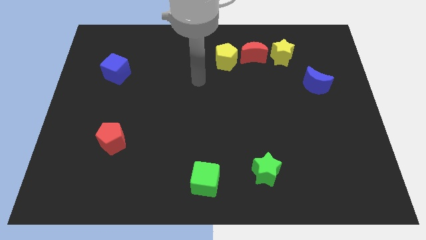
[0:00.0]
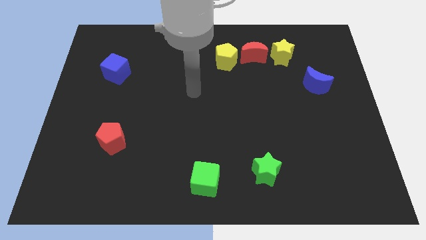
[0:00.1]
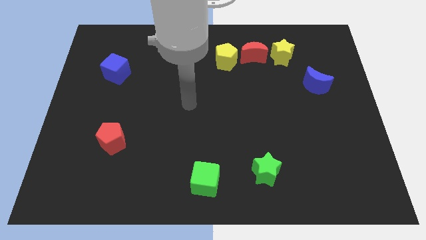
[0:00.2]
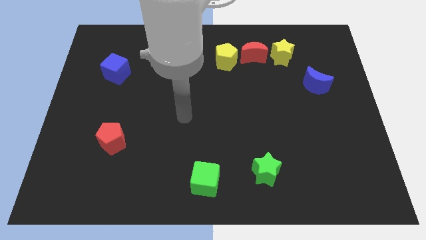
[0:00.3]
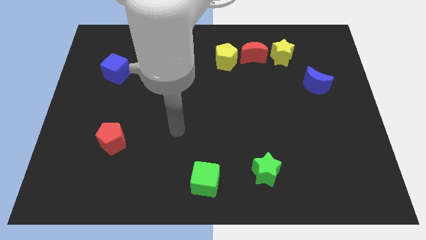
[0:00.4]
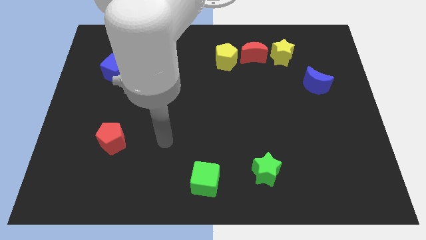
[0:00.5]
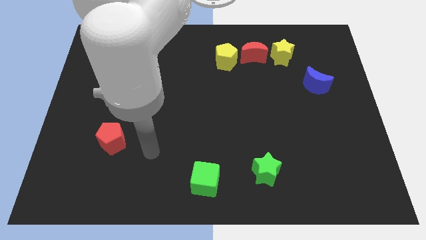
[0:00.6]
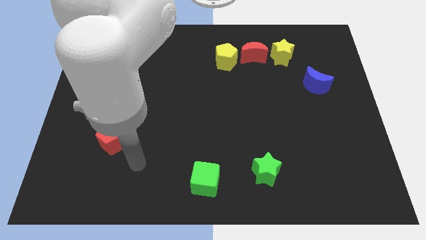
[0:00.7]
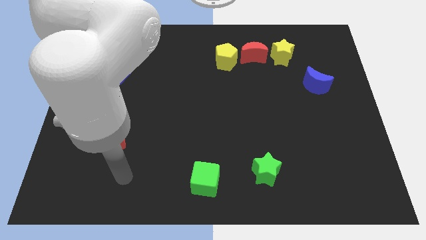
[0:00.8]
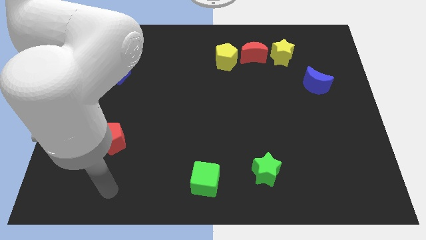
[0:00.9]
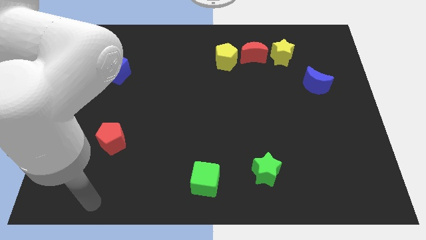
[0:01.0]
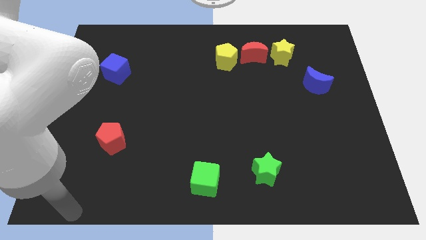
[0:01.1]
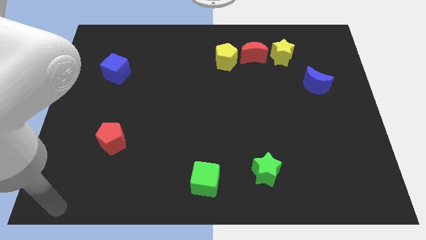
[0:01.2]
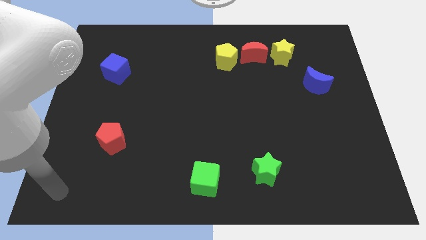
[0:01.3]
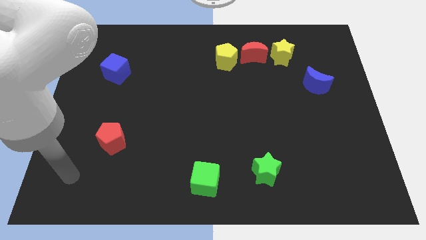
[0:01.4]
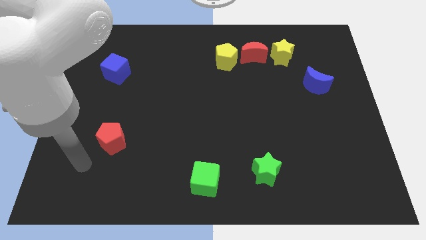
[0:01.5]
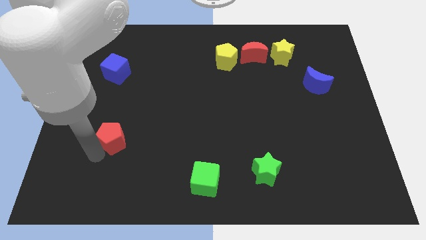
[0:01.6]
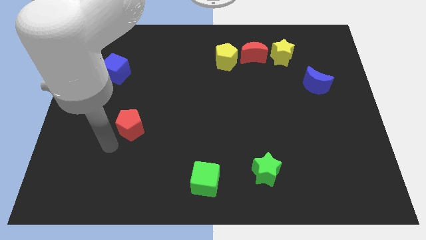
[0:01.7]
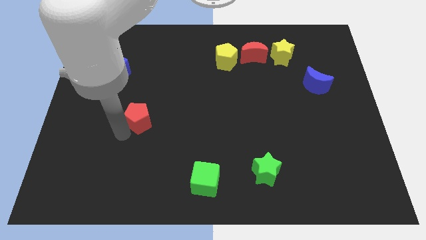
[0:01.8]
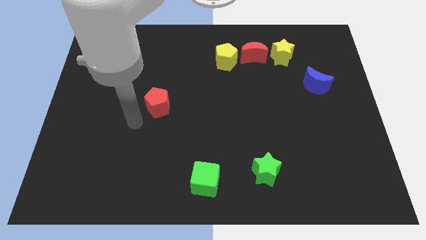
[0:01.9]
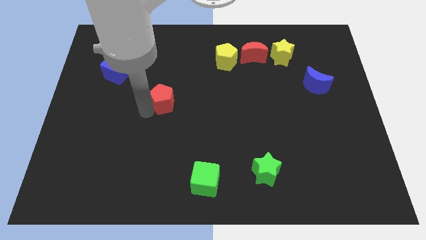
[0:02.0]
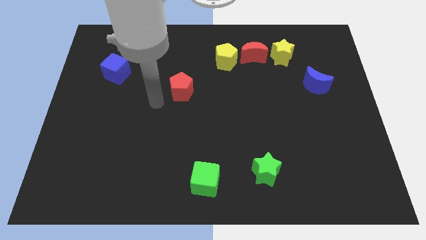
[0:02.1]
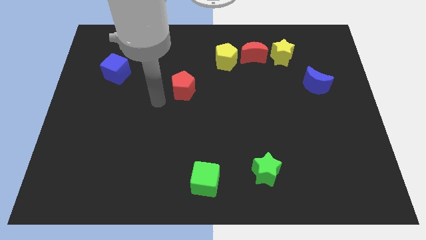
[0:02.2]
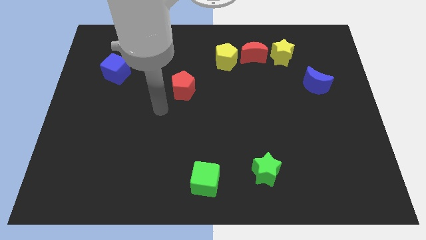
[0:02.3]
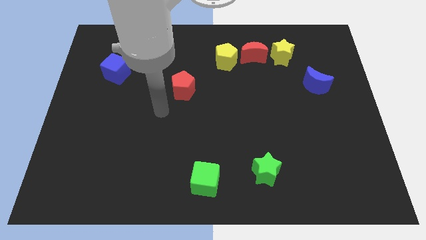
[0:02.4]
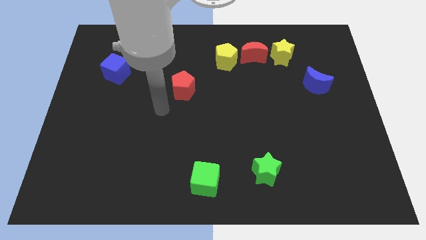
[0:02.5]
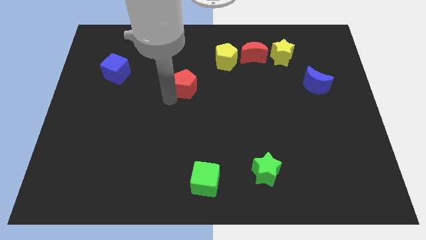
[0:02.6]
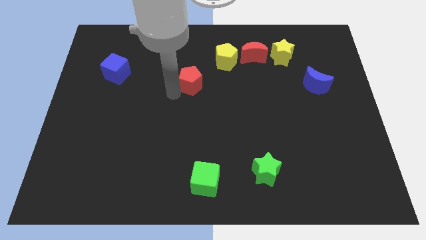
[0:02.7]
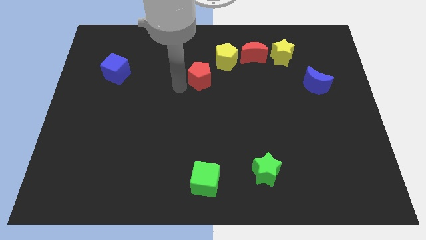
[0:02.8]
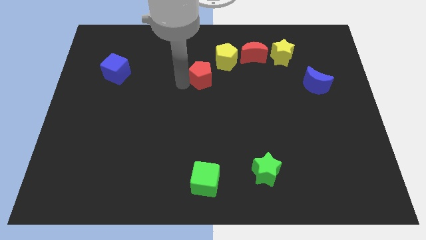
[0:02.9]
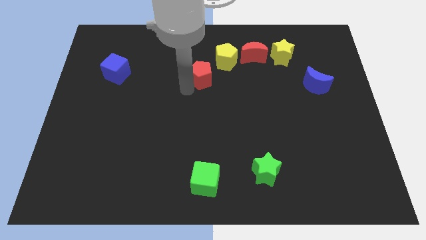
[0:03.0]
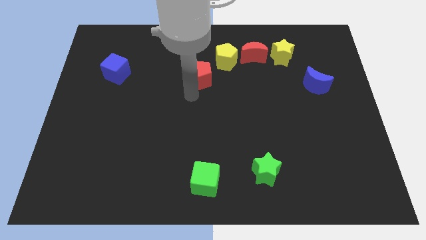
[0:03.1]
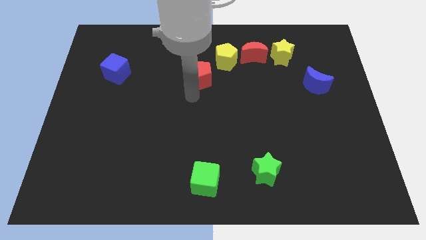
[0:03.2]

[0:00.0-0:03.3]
put the red pentagon above the green cube

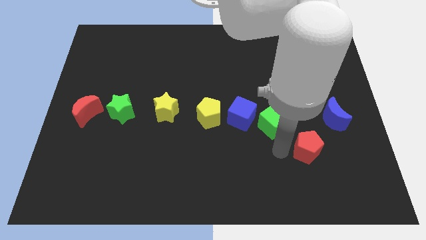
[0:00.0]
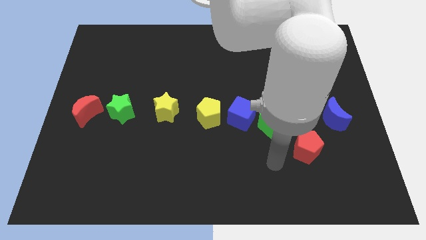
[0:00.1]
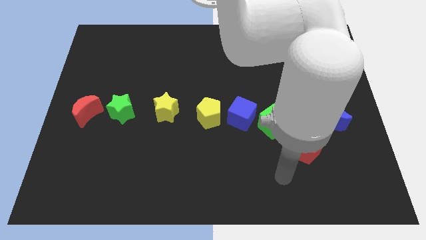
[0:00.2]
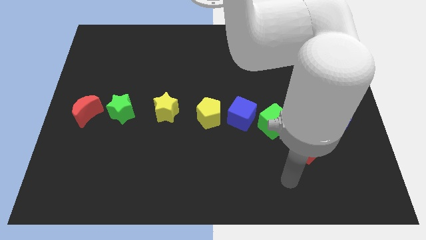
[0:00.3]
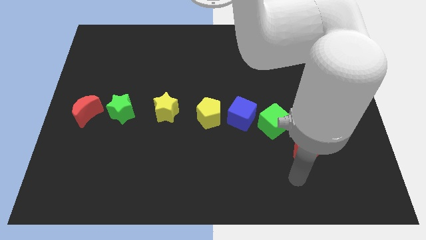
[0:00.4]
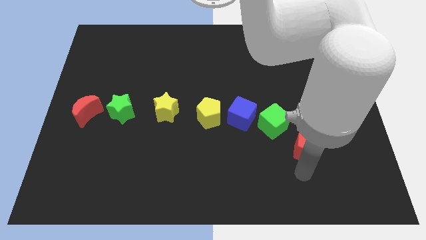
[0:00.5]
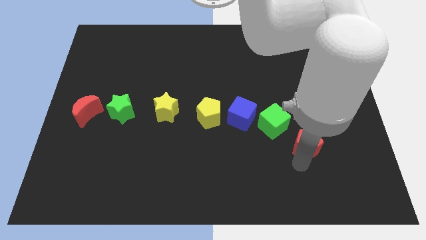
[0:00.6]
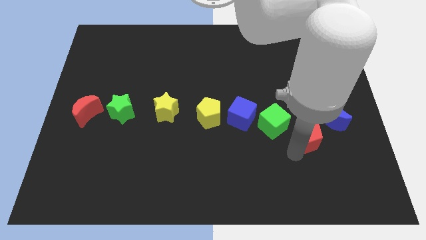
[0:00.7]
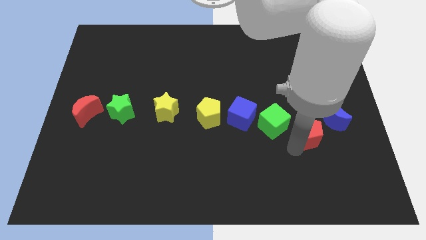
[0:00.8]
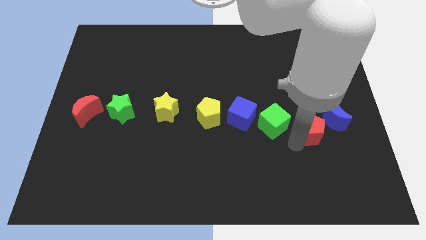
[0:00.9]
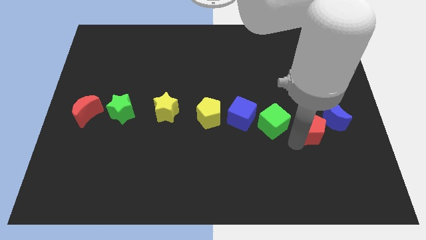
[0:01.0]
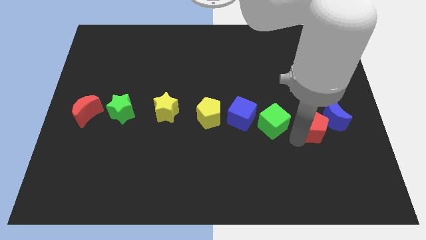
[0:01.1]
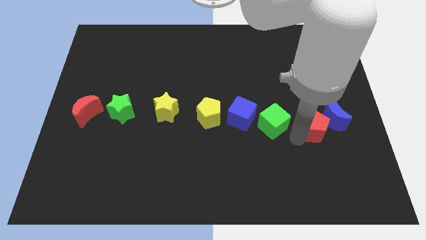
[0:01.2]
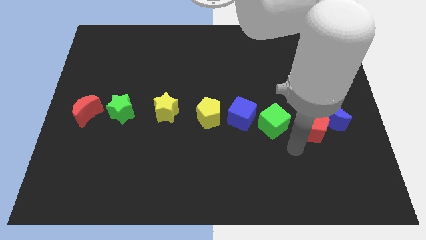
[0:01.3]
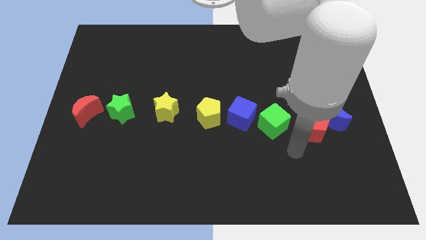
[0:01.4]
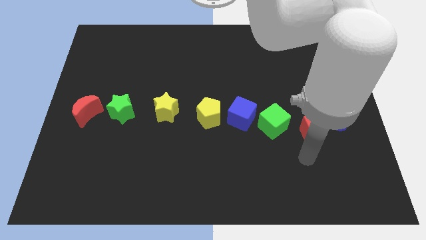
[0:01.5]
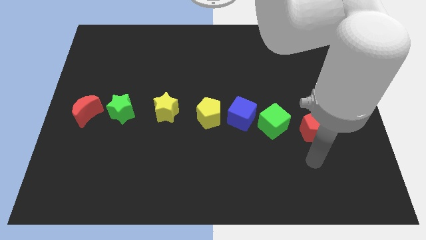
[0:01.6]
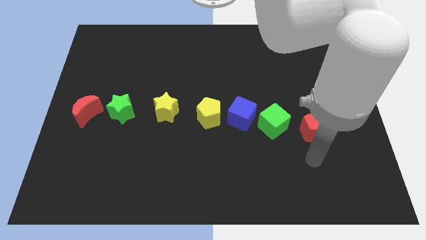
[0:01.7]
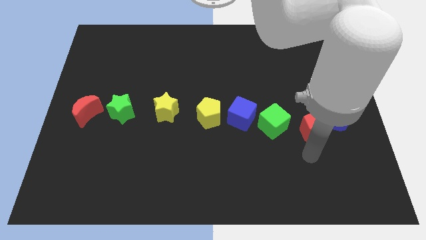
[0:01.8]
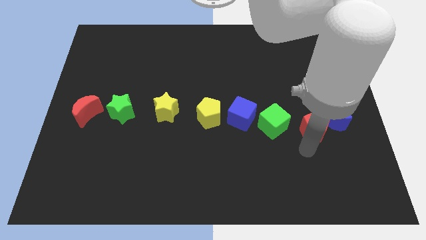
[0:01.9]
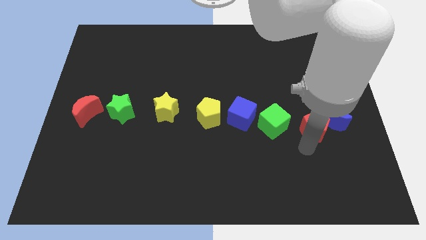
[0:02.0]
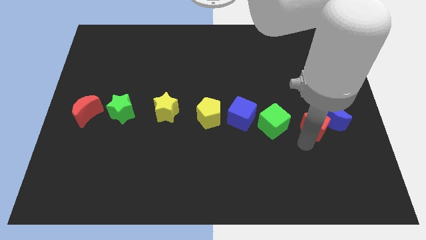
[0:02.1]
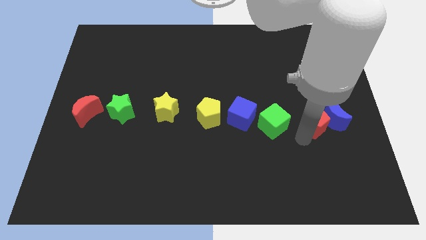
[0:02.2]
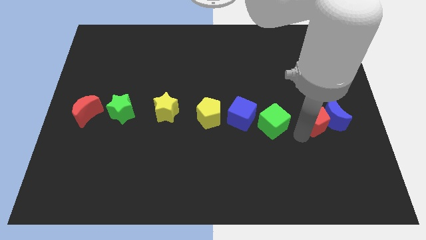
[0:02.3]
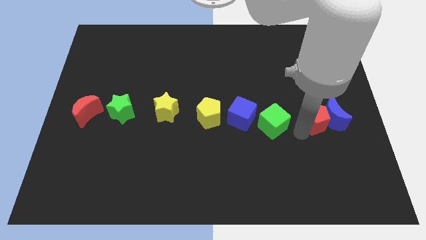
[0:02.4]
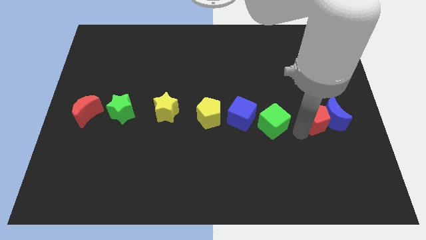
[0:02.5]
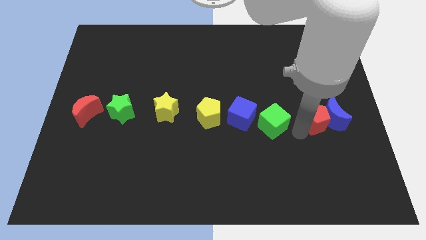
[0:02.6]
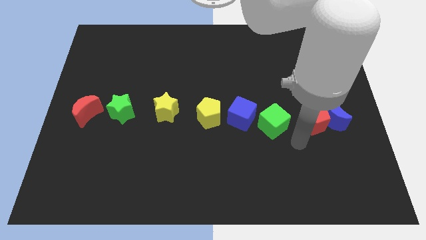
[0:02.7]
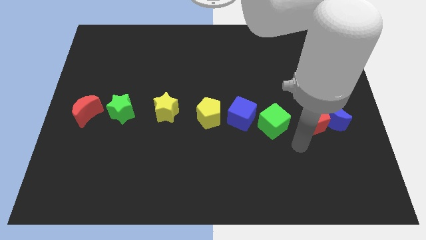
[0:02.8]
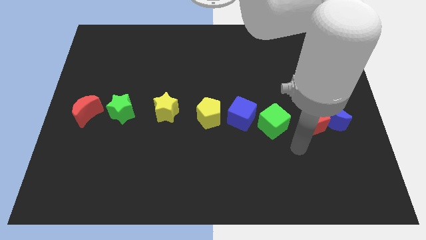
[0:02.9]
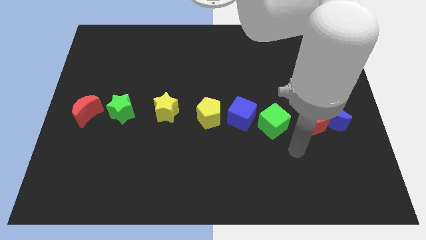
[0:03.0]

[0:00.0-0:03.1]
place the red penatgon in between the green cube and blue crescent

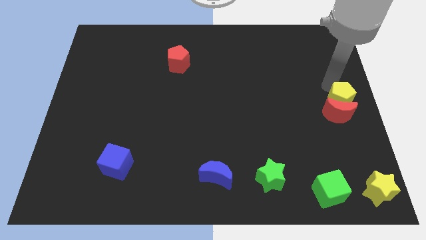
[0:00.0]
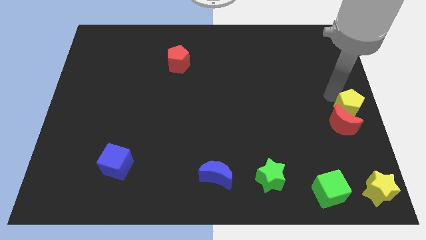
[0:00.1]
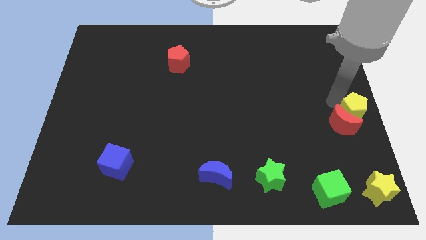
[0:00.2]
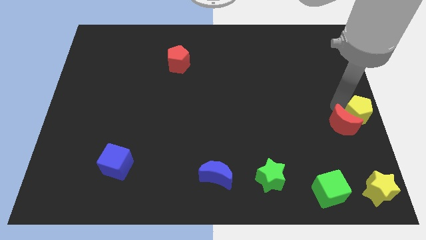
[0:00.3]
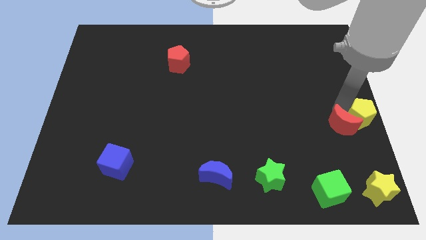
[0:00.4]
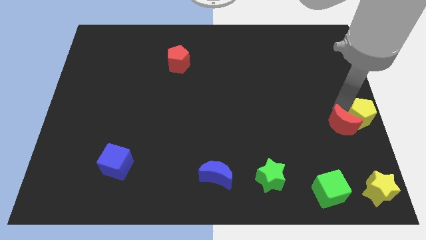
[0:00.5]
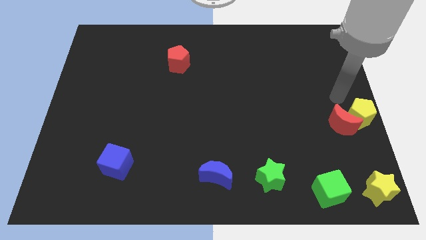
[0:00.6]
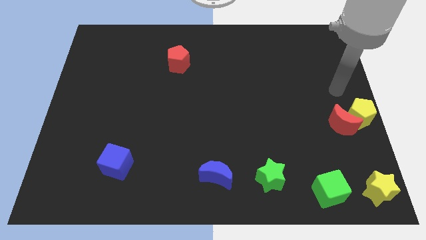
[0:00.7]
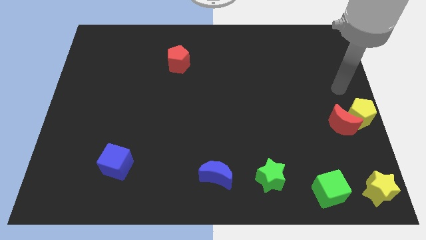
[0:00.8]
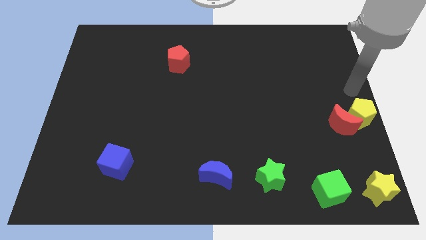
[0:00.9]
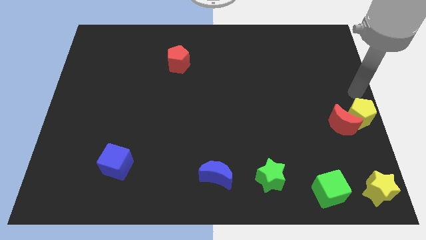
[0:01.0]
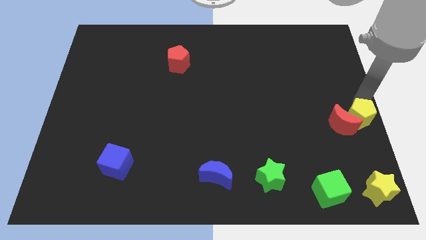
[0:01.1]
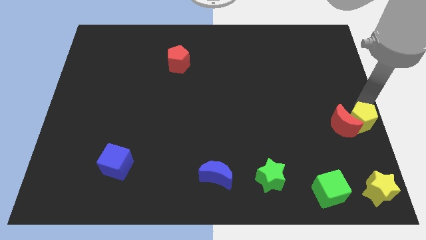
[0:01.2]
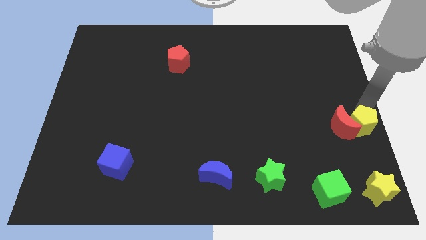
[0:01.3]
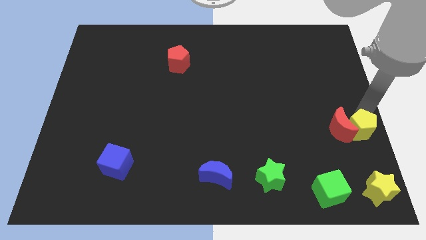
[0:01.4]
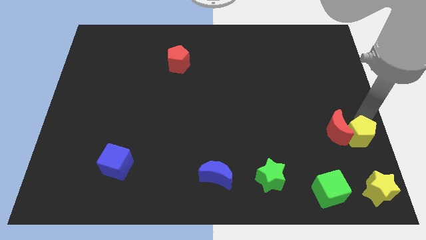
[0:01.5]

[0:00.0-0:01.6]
push the yellow pentagon to the right of the red crescent

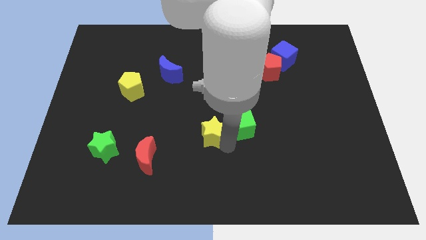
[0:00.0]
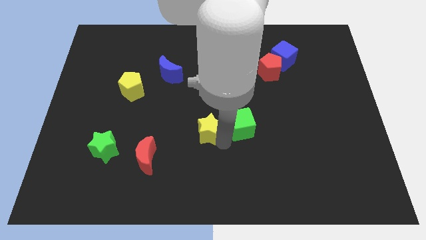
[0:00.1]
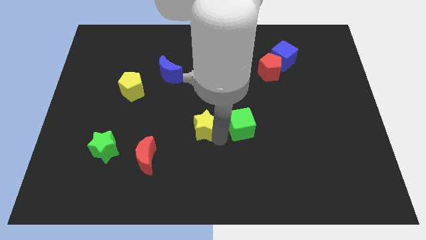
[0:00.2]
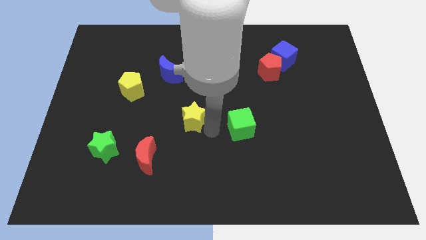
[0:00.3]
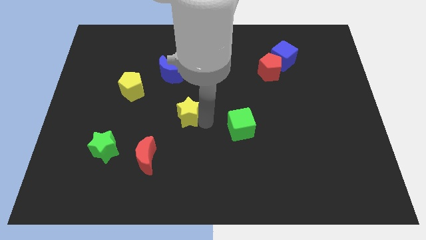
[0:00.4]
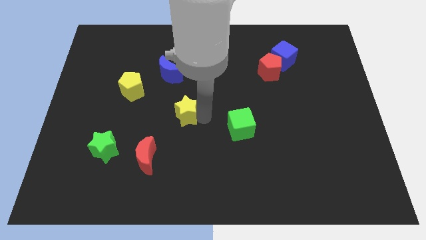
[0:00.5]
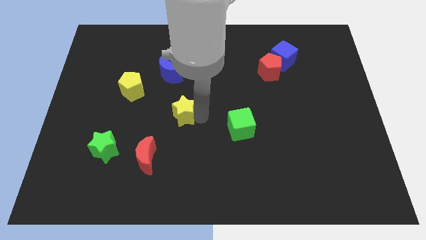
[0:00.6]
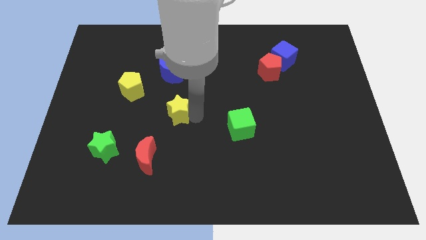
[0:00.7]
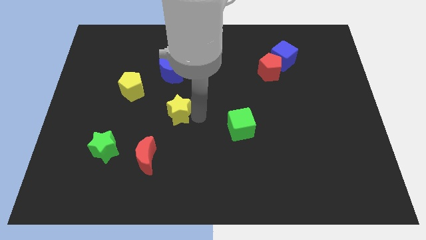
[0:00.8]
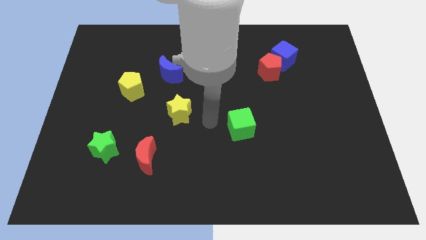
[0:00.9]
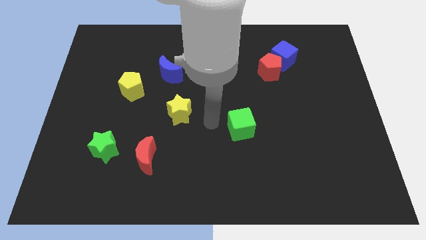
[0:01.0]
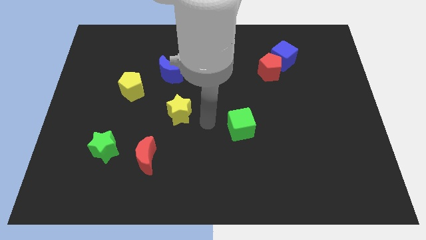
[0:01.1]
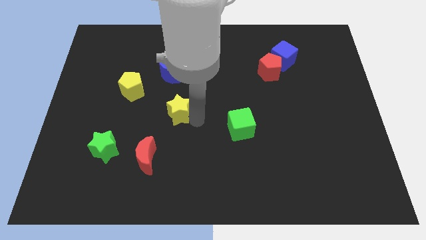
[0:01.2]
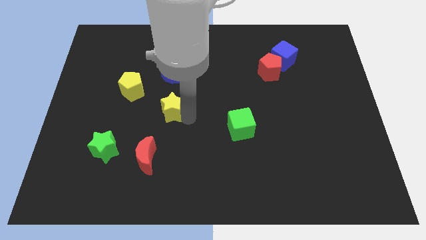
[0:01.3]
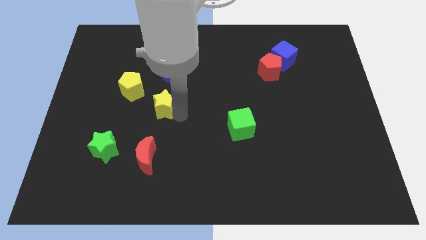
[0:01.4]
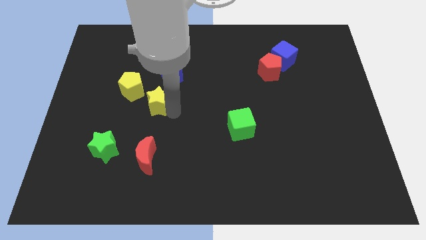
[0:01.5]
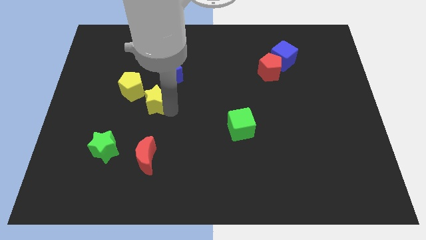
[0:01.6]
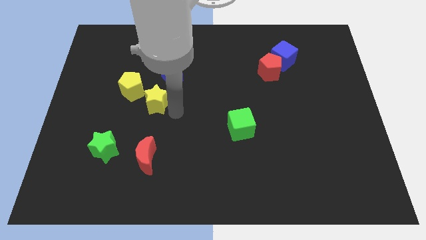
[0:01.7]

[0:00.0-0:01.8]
move the yellow star to the bottom right of the yellow pentagon
